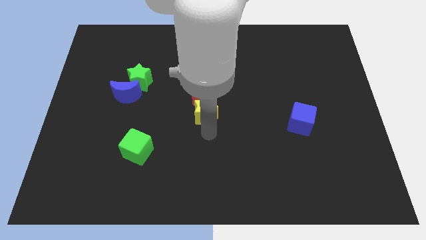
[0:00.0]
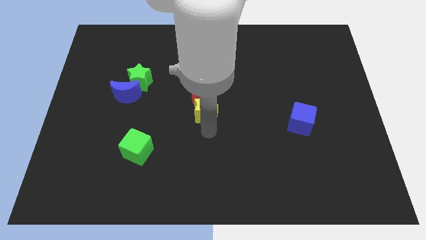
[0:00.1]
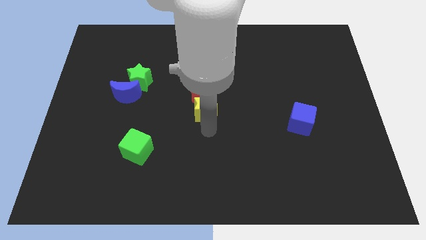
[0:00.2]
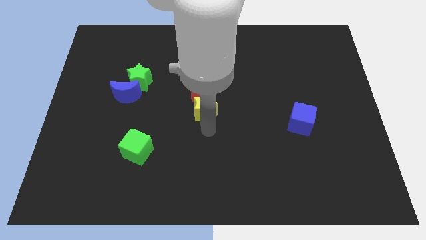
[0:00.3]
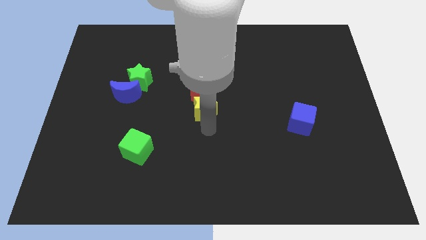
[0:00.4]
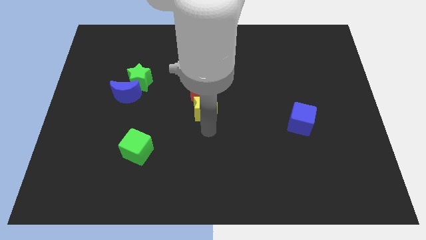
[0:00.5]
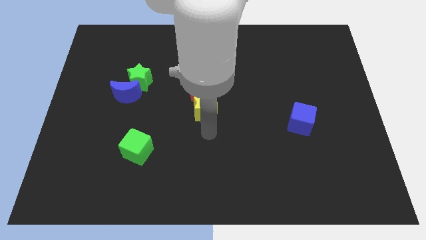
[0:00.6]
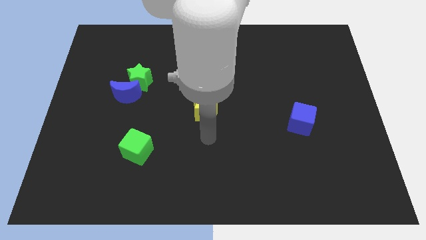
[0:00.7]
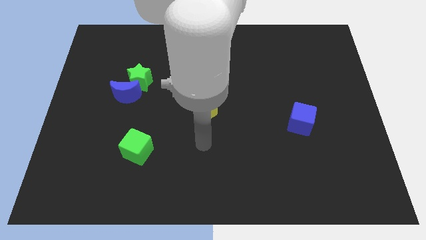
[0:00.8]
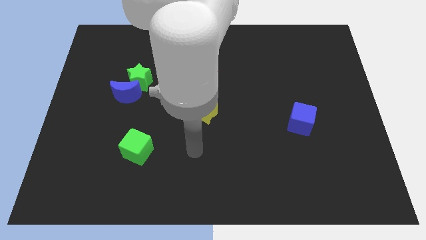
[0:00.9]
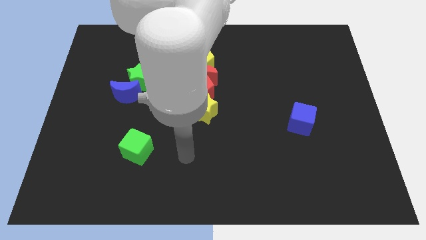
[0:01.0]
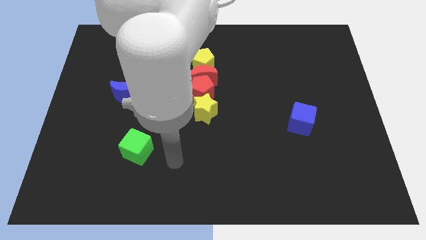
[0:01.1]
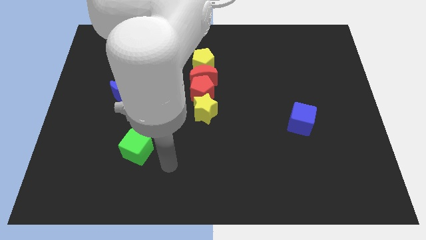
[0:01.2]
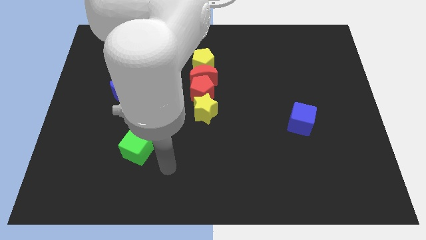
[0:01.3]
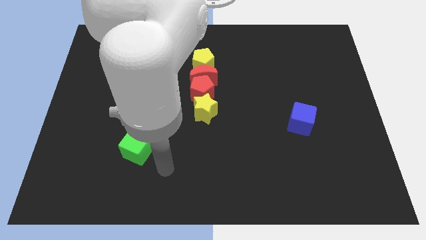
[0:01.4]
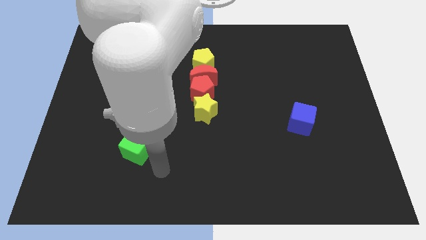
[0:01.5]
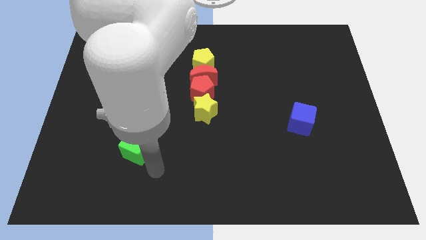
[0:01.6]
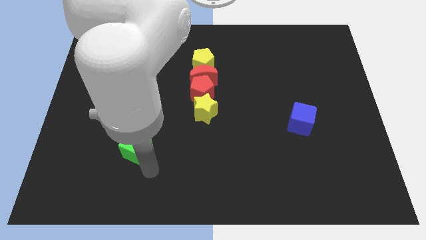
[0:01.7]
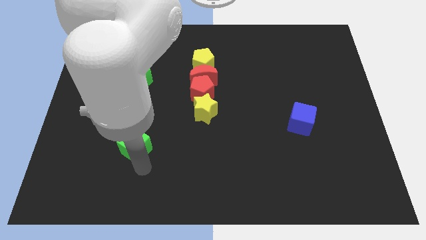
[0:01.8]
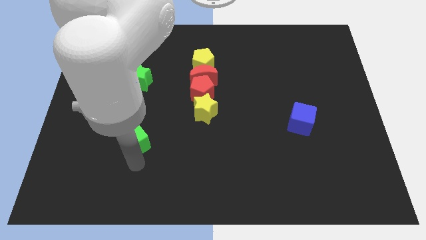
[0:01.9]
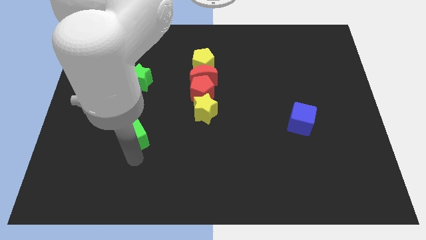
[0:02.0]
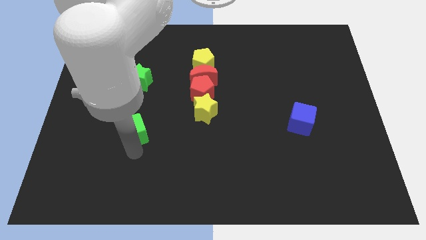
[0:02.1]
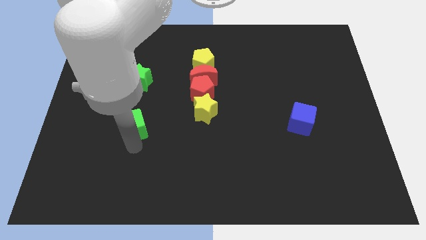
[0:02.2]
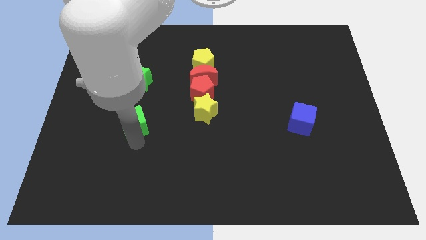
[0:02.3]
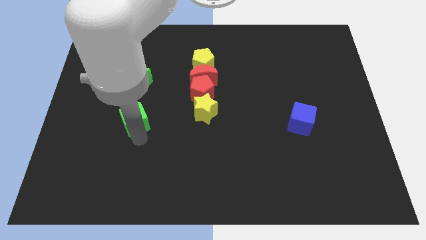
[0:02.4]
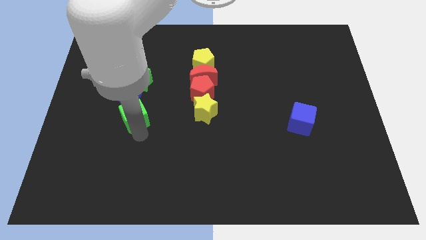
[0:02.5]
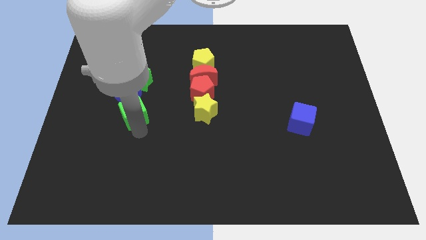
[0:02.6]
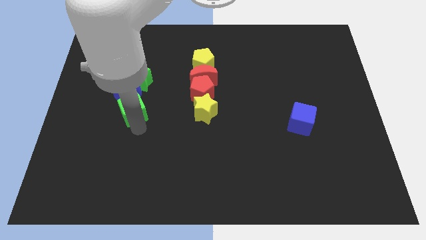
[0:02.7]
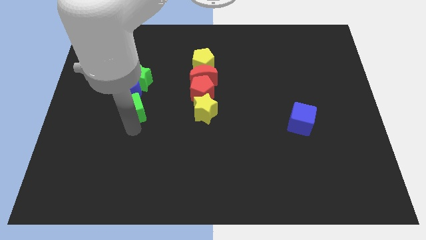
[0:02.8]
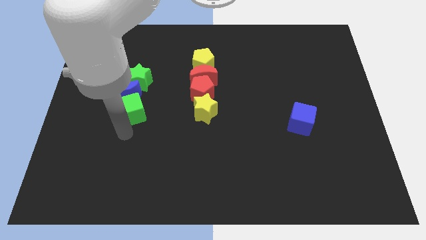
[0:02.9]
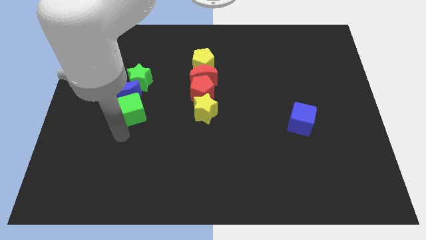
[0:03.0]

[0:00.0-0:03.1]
move green cube into blue moon

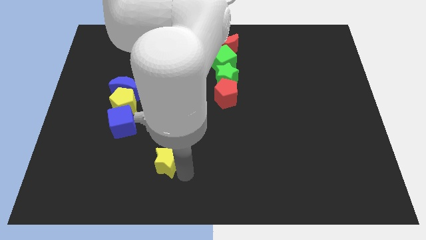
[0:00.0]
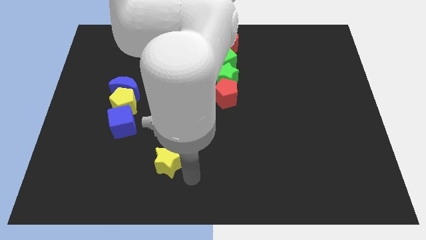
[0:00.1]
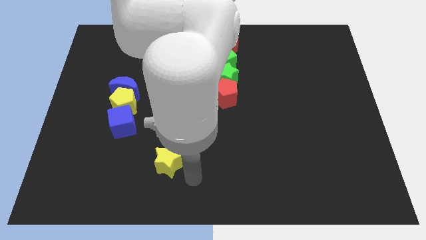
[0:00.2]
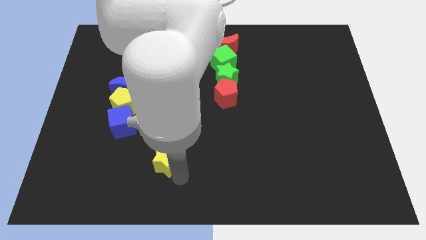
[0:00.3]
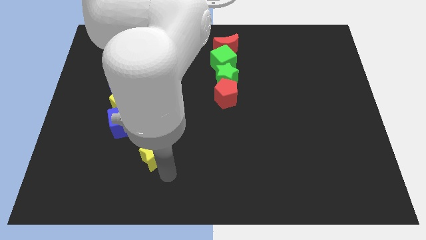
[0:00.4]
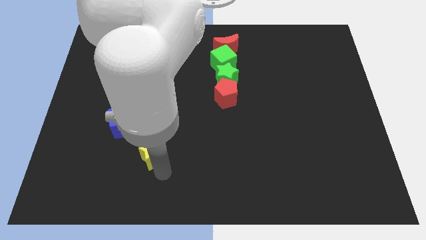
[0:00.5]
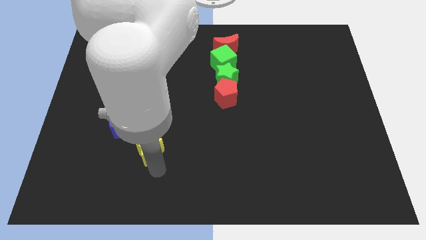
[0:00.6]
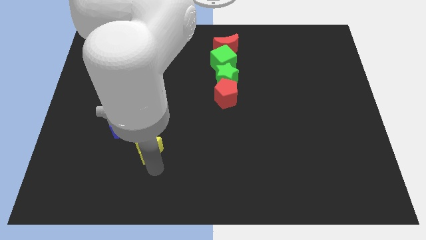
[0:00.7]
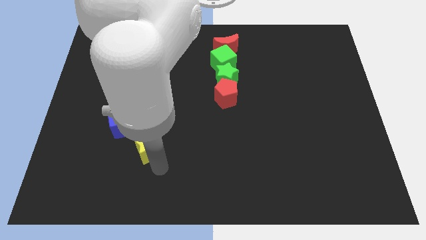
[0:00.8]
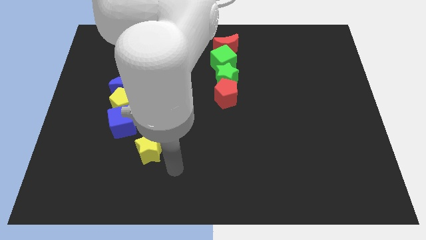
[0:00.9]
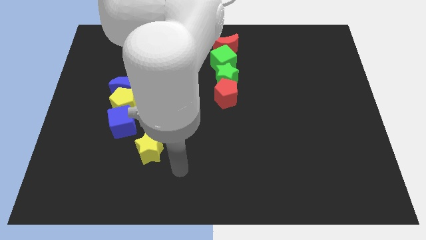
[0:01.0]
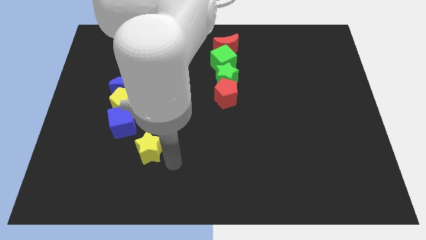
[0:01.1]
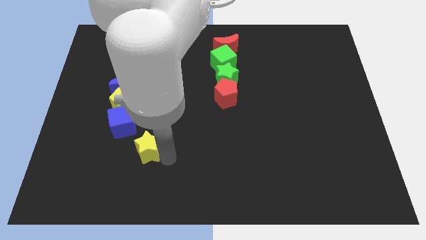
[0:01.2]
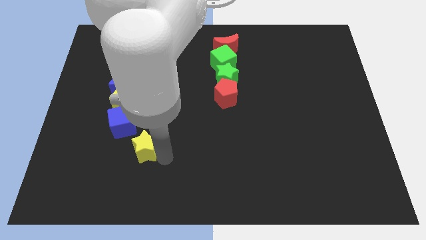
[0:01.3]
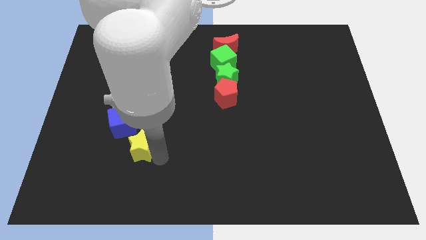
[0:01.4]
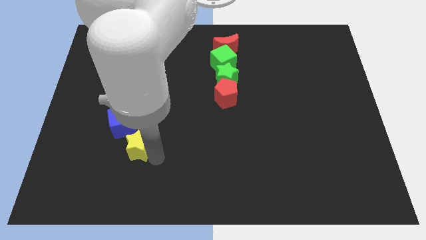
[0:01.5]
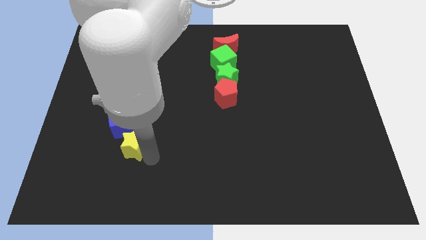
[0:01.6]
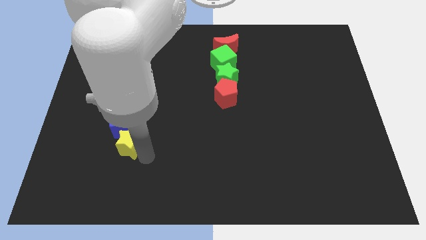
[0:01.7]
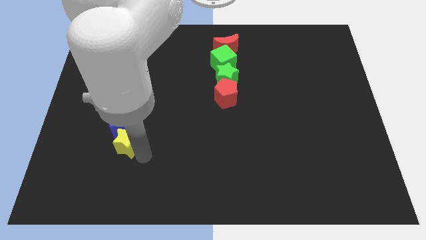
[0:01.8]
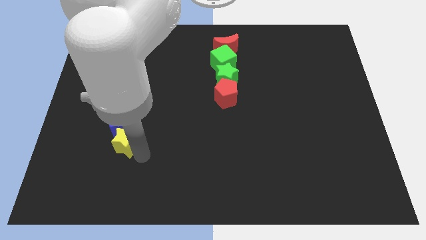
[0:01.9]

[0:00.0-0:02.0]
move the yellow star to the bottom of the blue cube

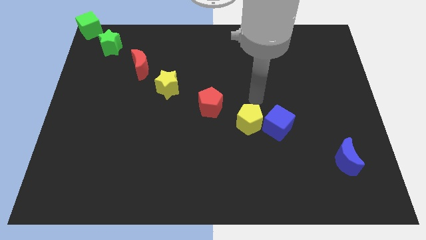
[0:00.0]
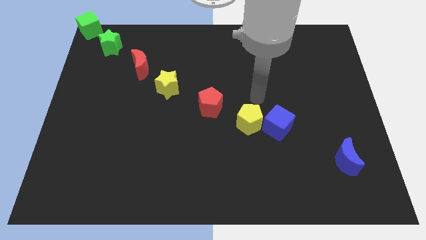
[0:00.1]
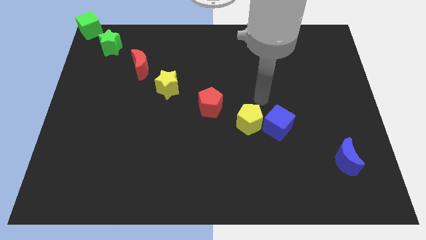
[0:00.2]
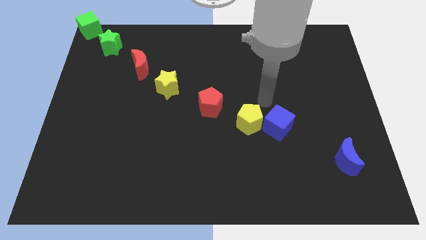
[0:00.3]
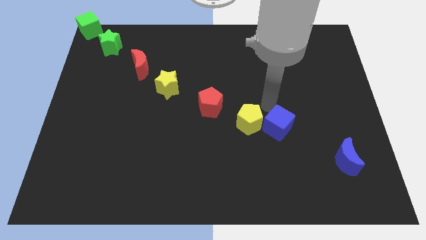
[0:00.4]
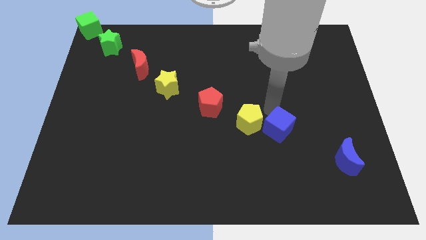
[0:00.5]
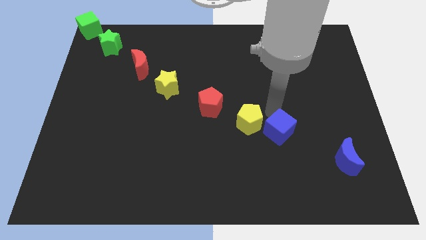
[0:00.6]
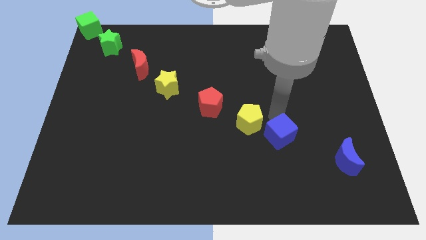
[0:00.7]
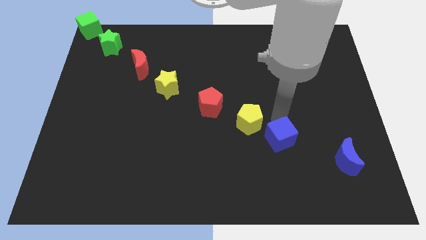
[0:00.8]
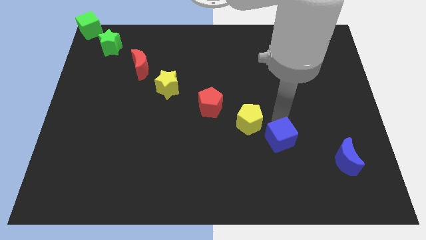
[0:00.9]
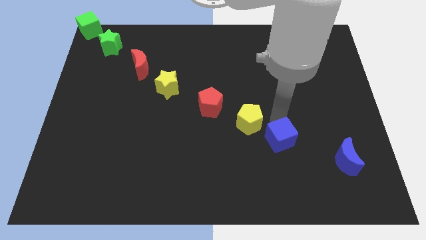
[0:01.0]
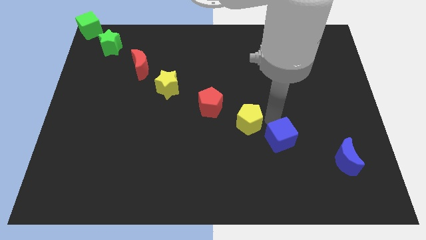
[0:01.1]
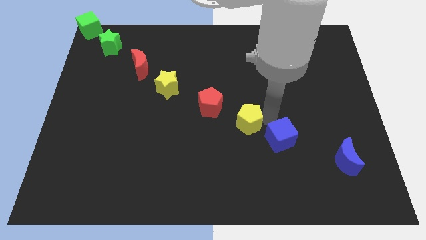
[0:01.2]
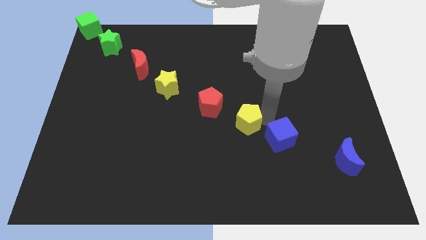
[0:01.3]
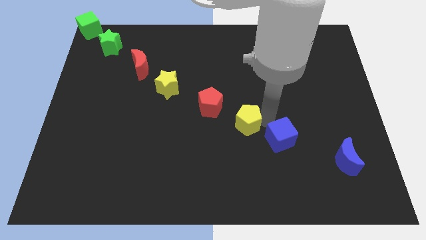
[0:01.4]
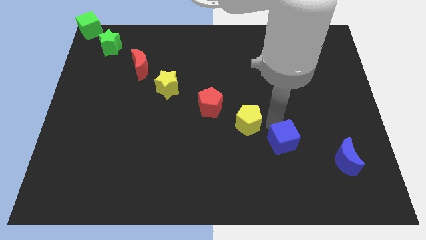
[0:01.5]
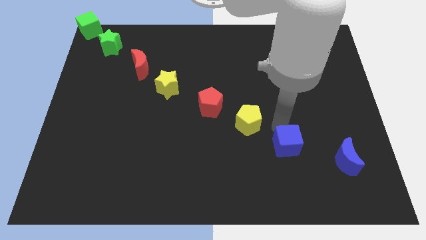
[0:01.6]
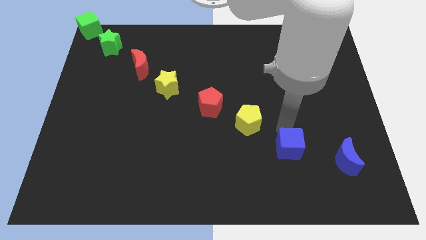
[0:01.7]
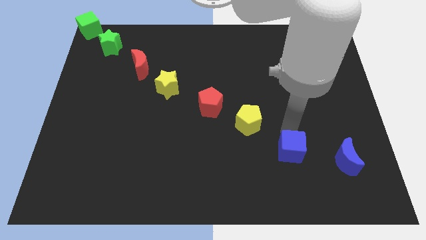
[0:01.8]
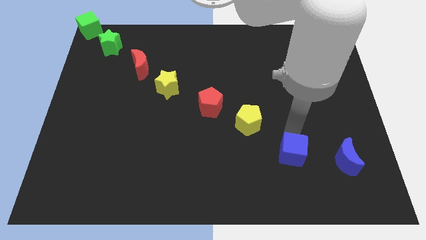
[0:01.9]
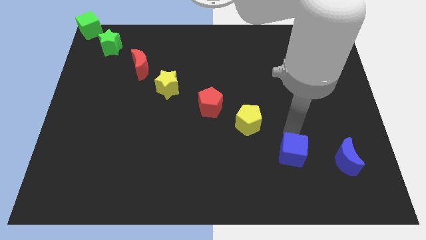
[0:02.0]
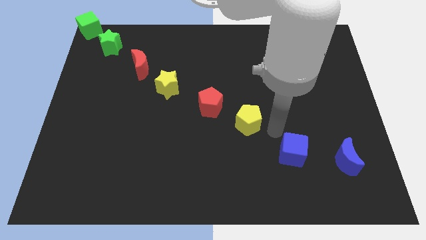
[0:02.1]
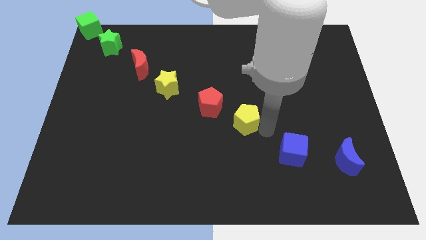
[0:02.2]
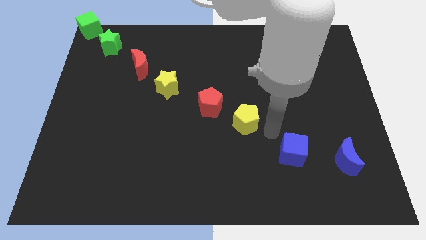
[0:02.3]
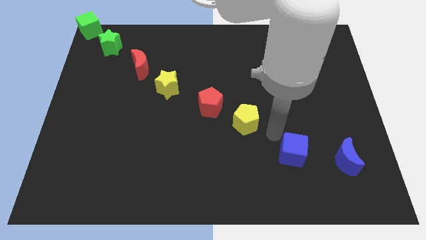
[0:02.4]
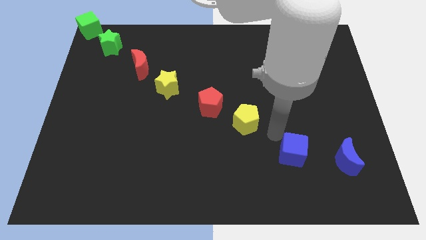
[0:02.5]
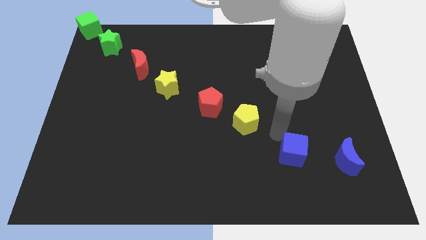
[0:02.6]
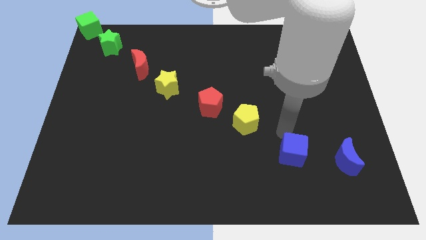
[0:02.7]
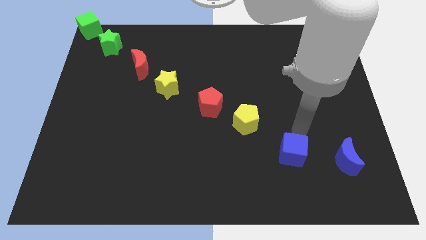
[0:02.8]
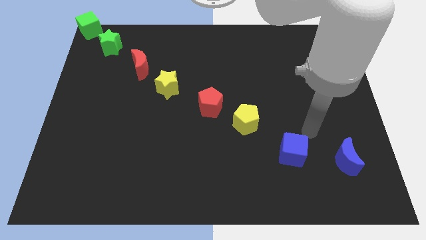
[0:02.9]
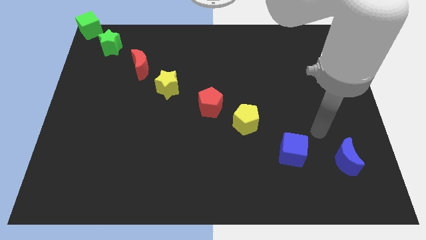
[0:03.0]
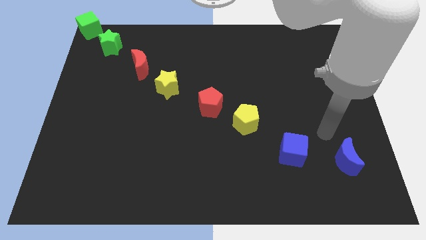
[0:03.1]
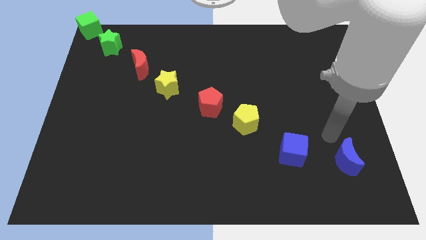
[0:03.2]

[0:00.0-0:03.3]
move the blue cube to the left of the blue crescent

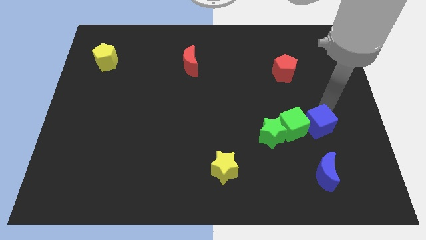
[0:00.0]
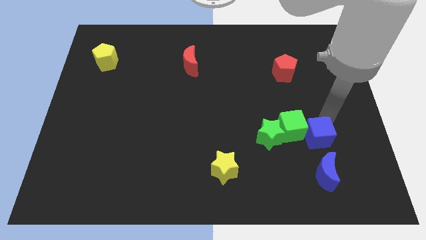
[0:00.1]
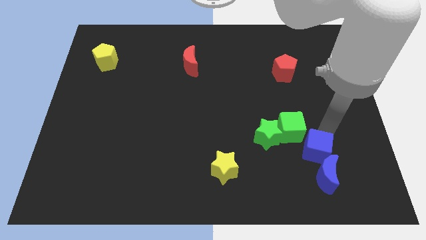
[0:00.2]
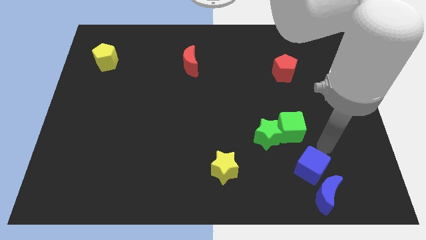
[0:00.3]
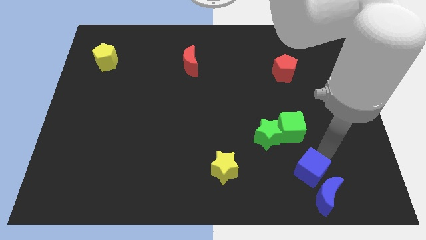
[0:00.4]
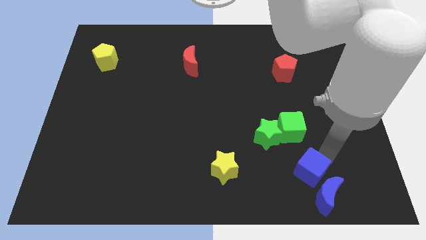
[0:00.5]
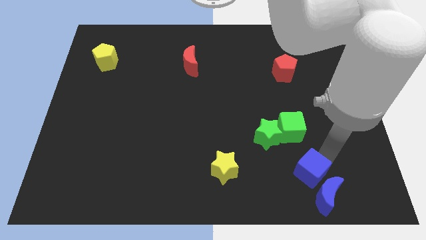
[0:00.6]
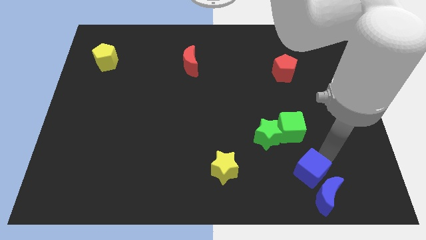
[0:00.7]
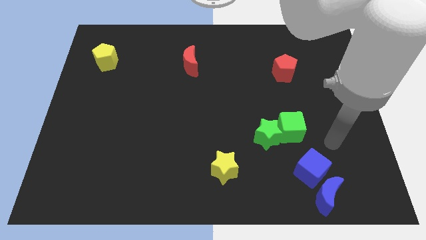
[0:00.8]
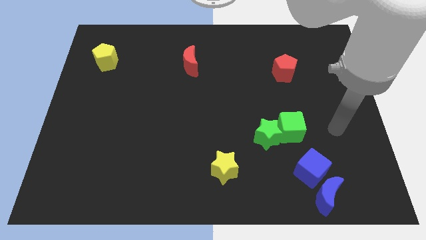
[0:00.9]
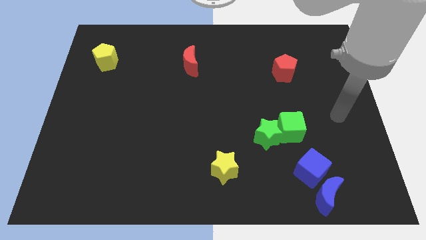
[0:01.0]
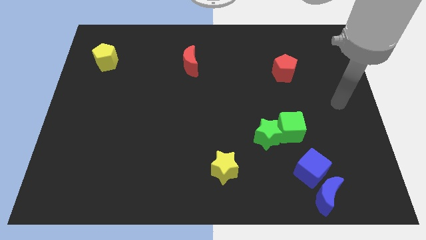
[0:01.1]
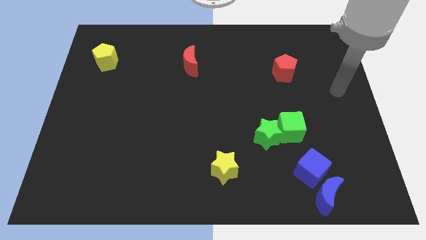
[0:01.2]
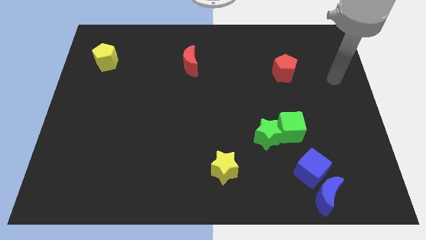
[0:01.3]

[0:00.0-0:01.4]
push the blue cube into the blue moon
